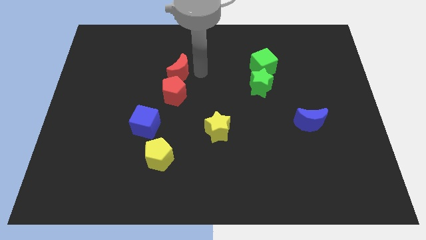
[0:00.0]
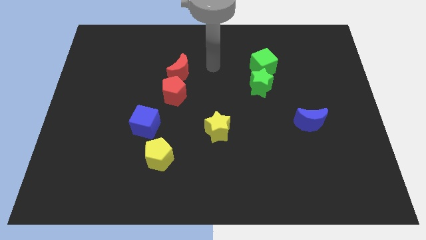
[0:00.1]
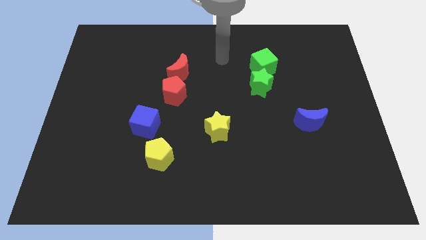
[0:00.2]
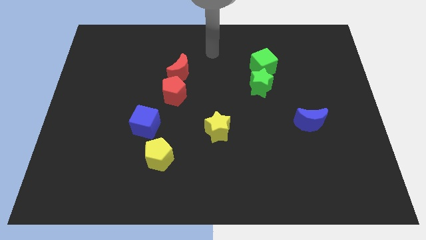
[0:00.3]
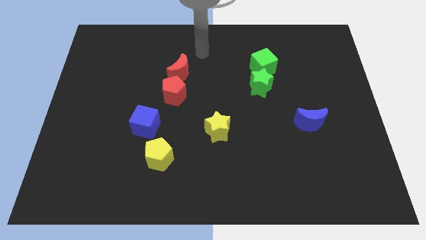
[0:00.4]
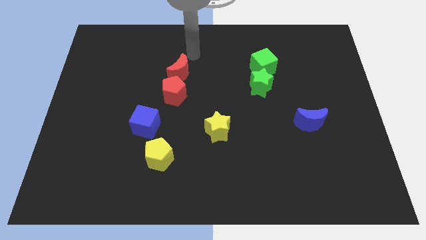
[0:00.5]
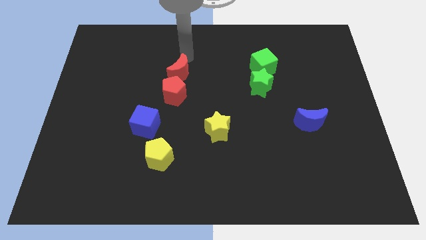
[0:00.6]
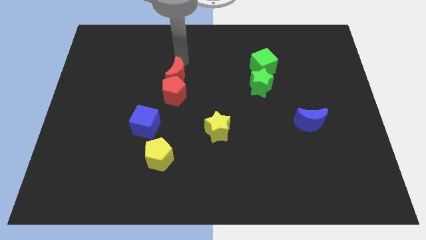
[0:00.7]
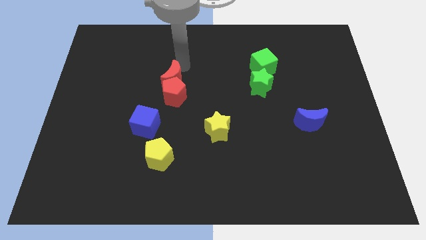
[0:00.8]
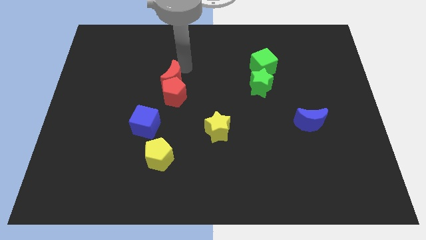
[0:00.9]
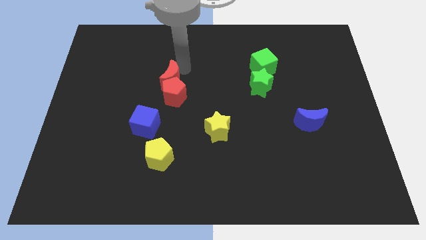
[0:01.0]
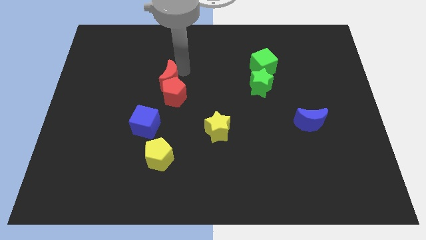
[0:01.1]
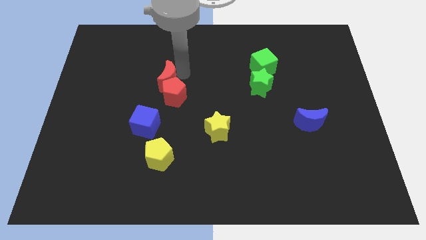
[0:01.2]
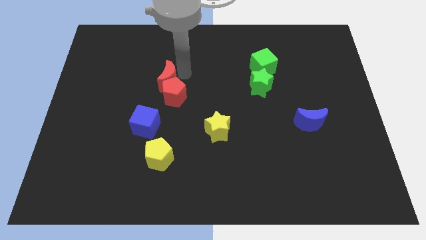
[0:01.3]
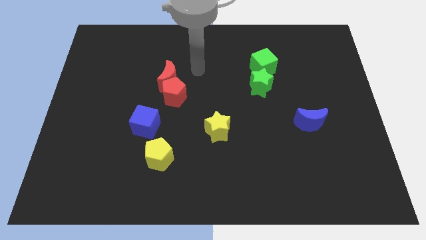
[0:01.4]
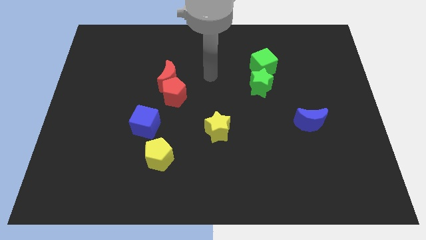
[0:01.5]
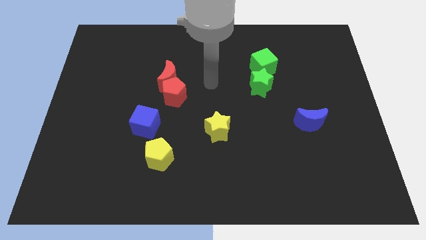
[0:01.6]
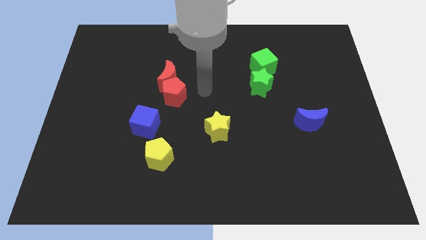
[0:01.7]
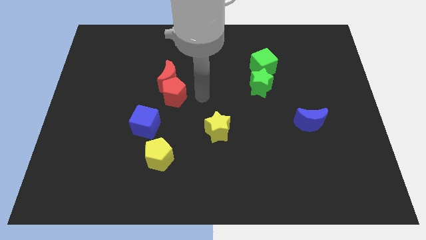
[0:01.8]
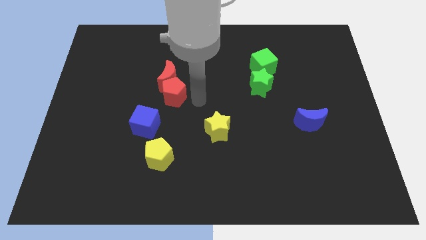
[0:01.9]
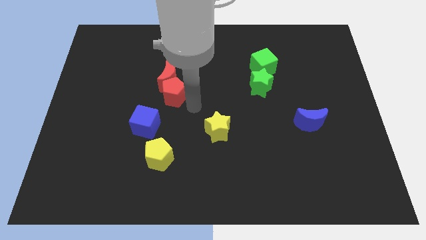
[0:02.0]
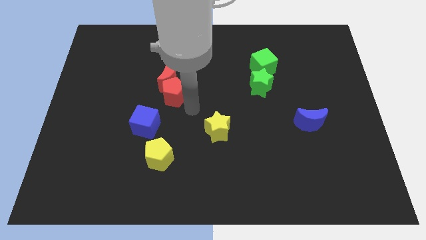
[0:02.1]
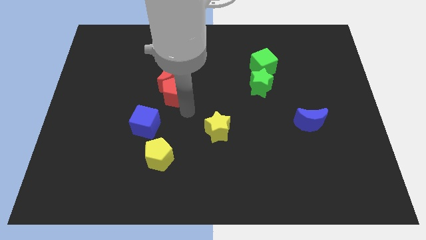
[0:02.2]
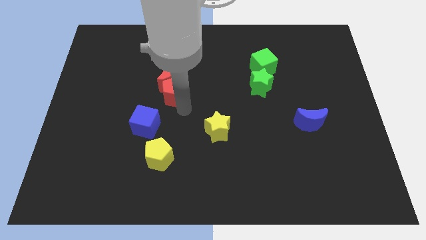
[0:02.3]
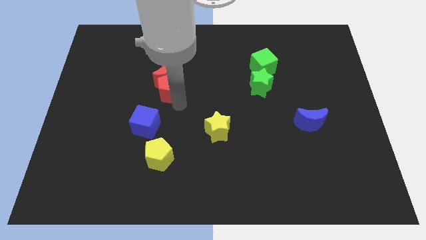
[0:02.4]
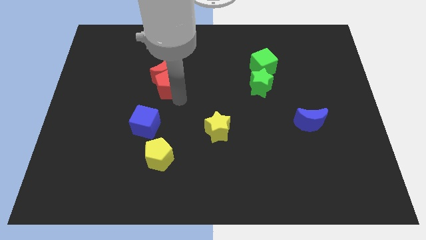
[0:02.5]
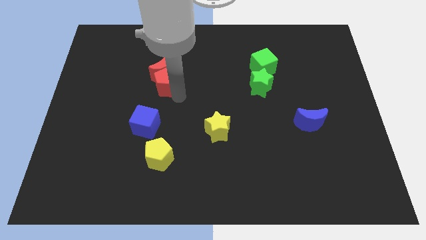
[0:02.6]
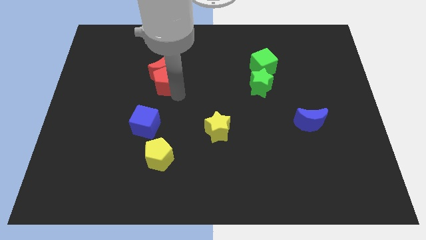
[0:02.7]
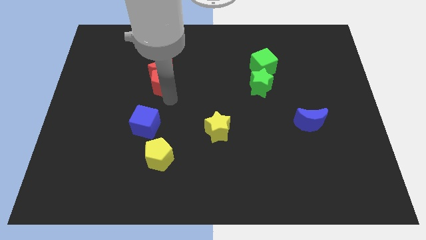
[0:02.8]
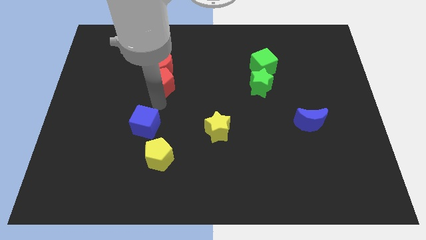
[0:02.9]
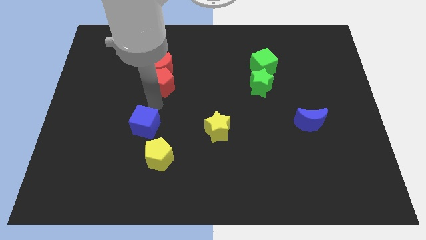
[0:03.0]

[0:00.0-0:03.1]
slide the red pentgaon and red moon towards the top left of the board

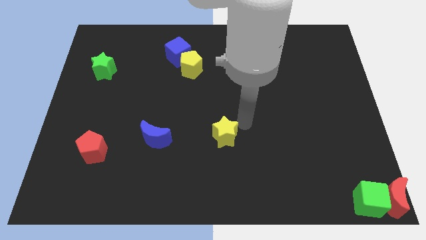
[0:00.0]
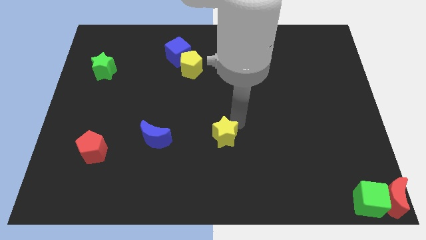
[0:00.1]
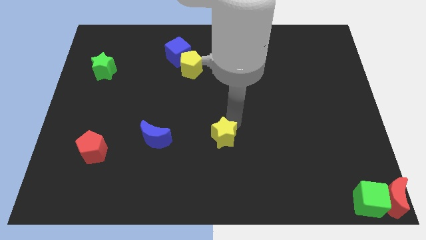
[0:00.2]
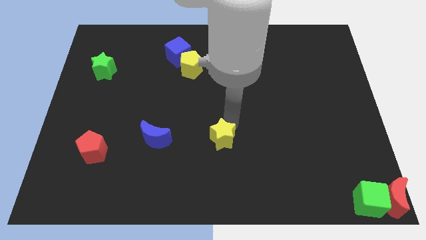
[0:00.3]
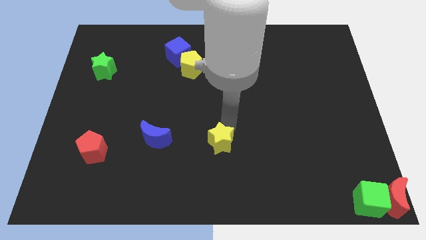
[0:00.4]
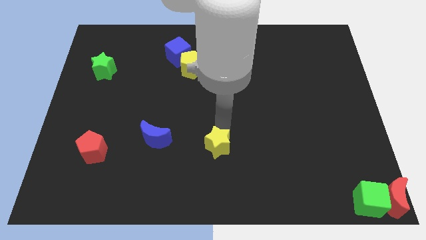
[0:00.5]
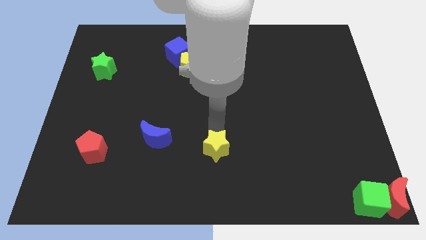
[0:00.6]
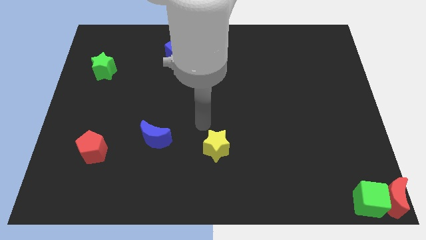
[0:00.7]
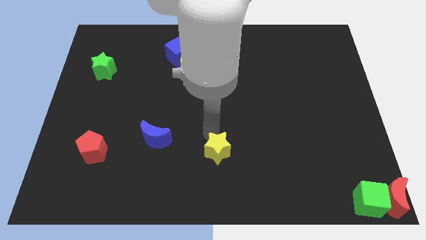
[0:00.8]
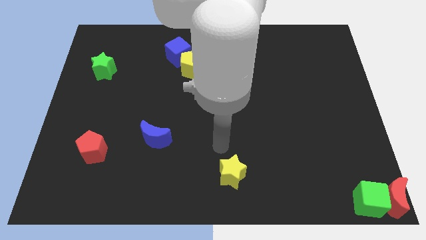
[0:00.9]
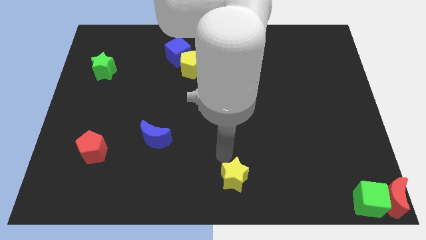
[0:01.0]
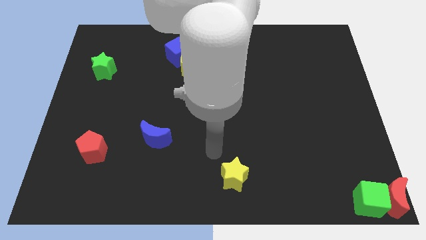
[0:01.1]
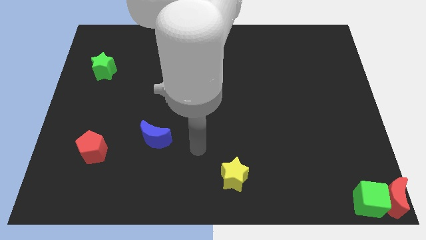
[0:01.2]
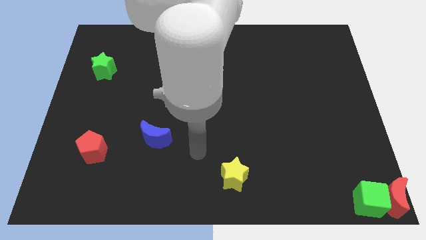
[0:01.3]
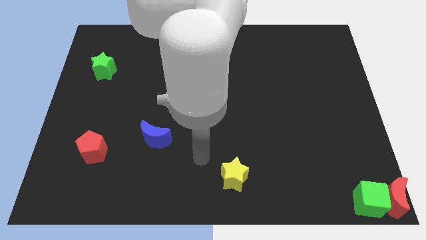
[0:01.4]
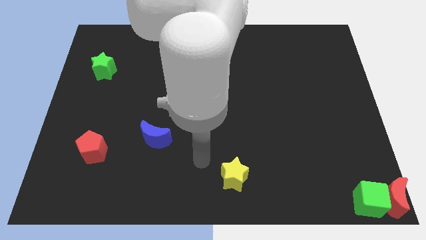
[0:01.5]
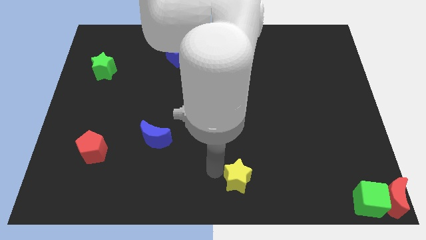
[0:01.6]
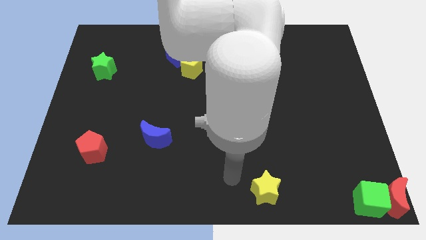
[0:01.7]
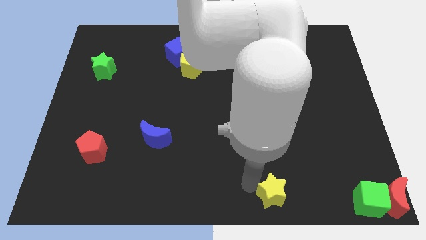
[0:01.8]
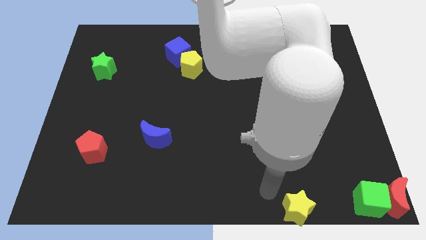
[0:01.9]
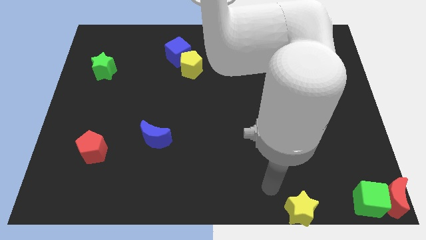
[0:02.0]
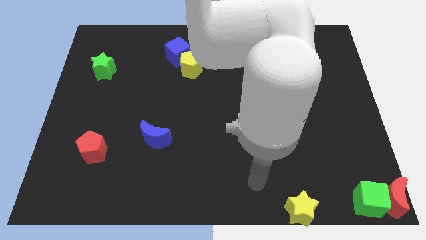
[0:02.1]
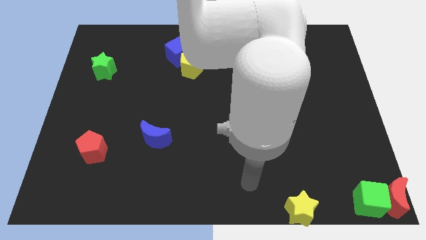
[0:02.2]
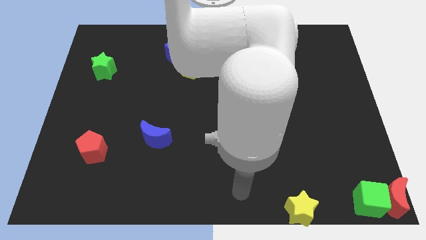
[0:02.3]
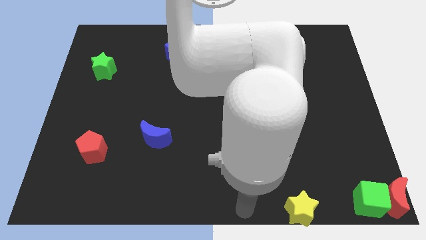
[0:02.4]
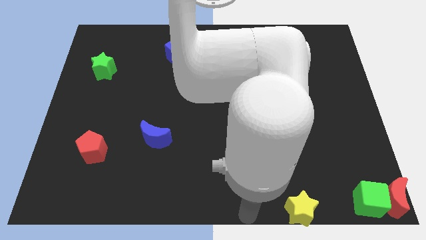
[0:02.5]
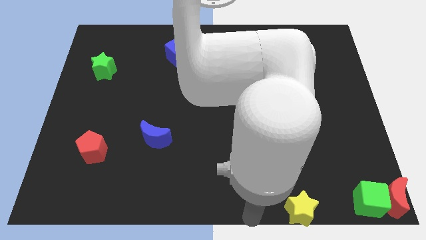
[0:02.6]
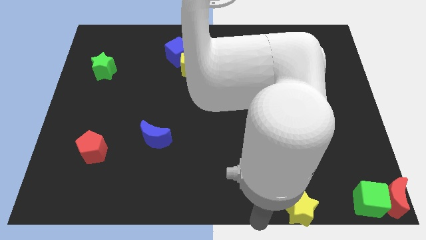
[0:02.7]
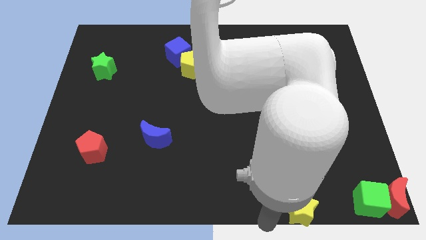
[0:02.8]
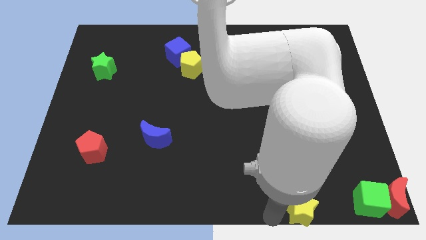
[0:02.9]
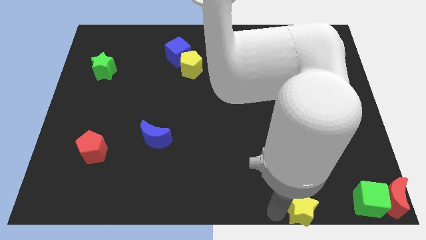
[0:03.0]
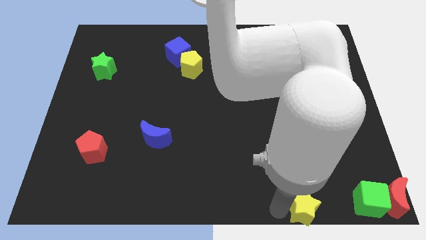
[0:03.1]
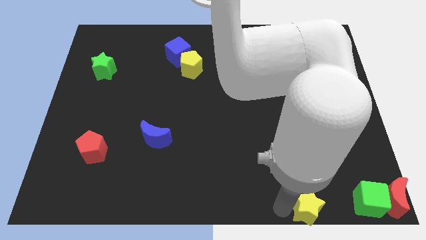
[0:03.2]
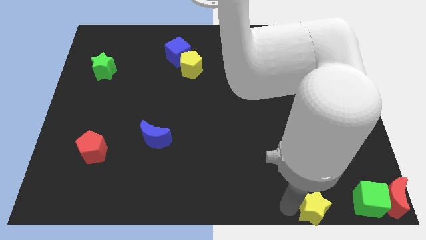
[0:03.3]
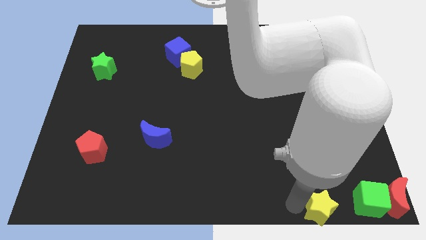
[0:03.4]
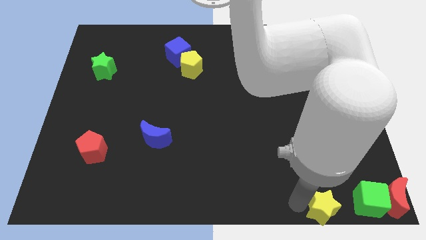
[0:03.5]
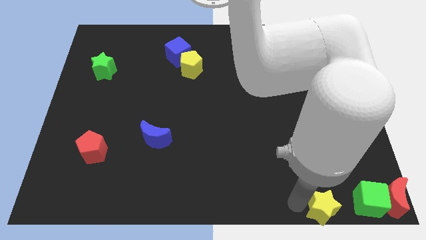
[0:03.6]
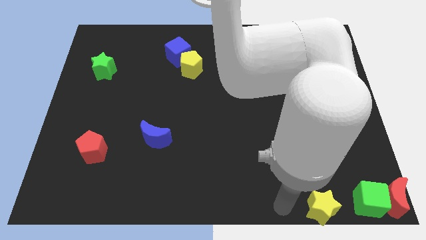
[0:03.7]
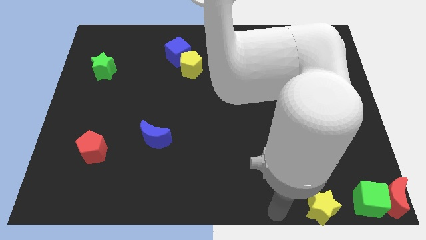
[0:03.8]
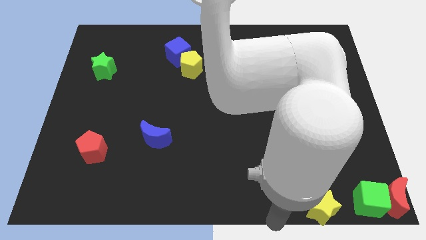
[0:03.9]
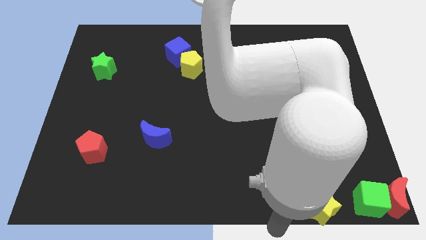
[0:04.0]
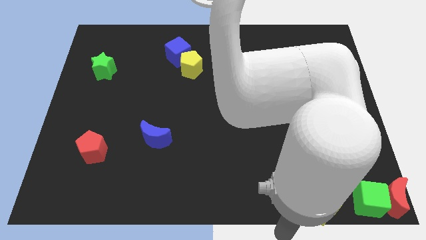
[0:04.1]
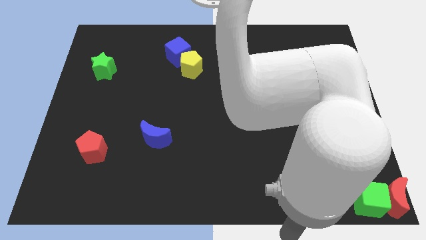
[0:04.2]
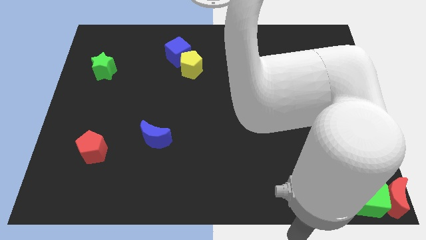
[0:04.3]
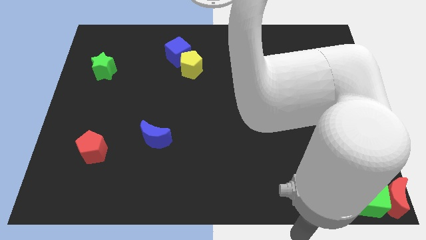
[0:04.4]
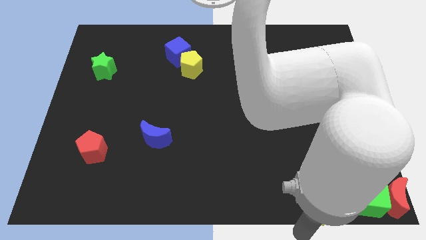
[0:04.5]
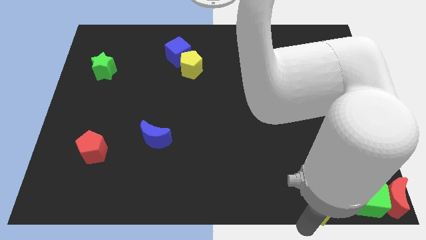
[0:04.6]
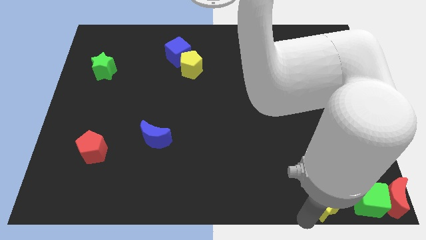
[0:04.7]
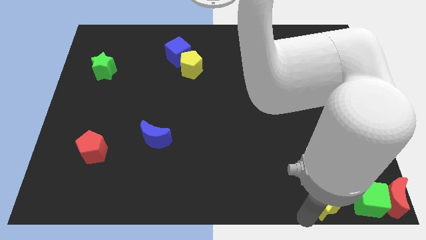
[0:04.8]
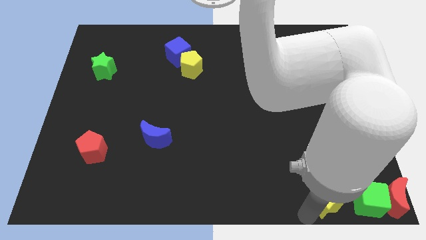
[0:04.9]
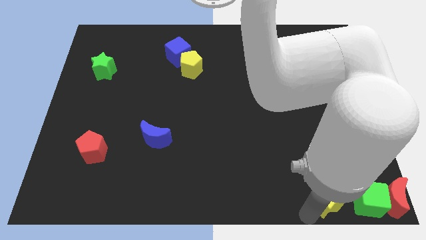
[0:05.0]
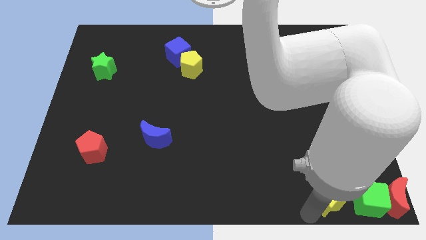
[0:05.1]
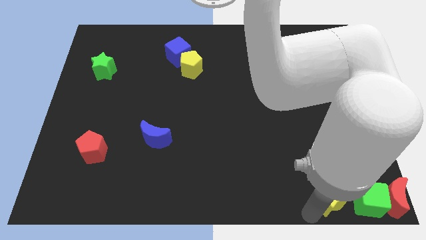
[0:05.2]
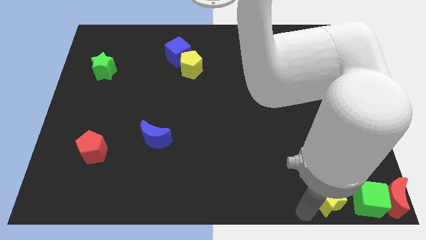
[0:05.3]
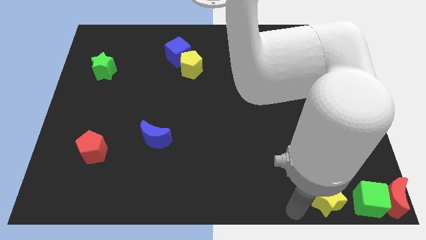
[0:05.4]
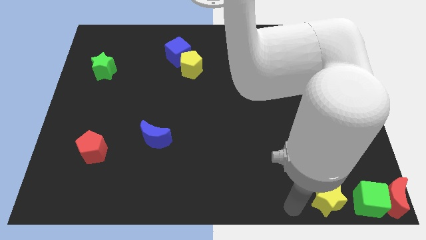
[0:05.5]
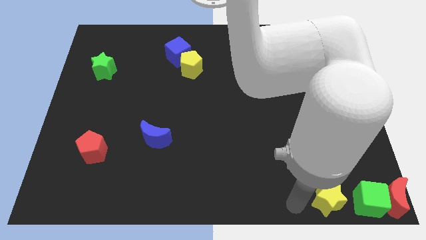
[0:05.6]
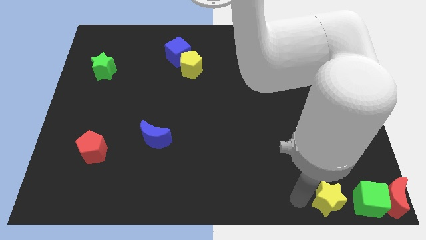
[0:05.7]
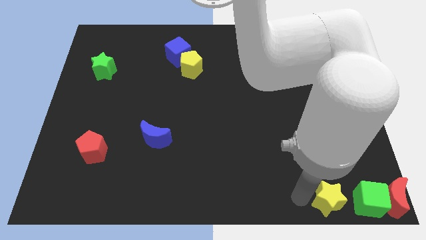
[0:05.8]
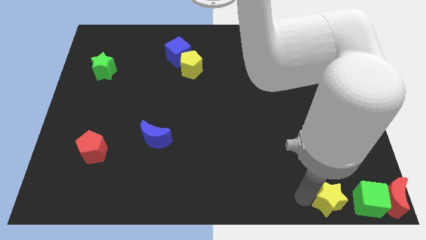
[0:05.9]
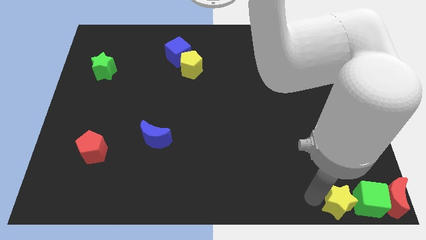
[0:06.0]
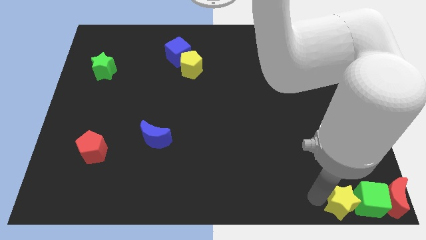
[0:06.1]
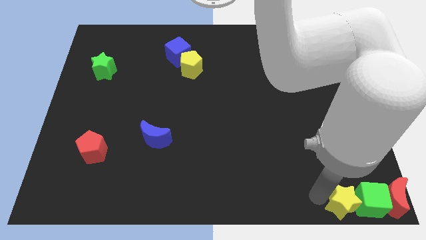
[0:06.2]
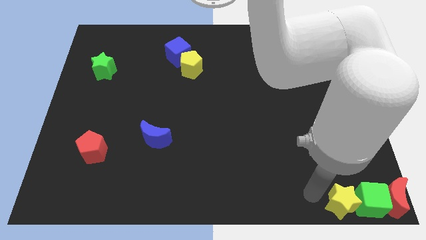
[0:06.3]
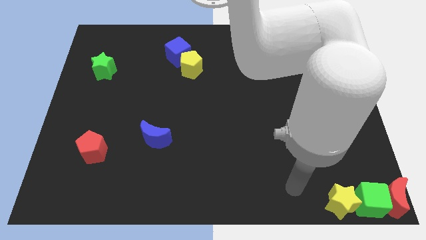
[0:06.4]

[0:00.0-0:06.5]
push the yellow star into the green cube
